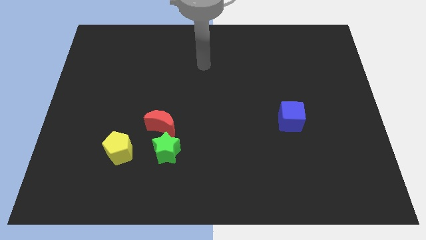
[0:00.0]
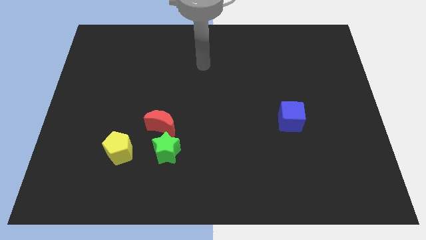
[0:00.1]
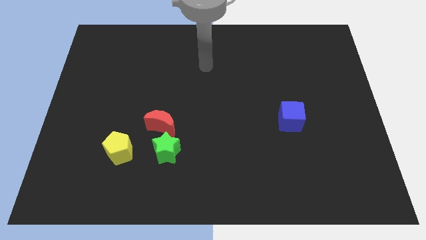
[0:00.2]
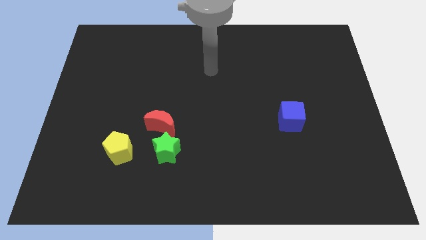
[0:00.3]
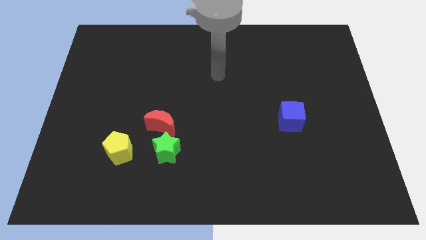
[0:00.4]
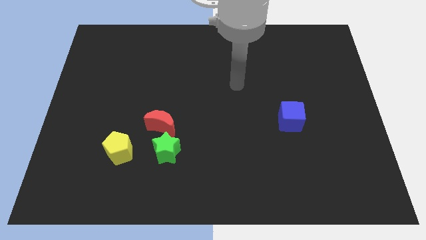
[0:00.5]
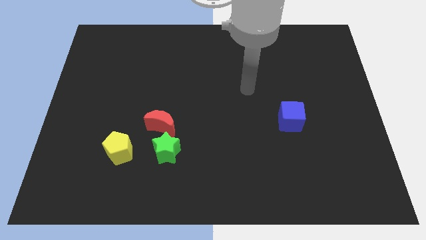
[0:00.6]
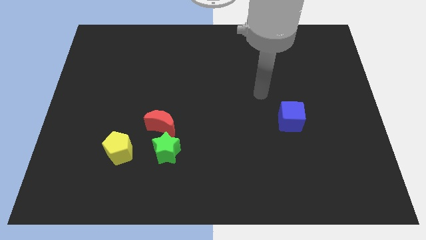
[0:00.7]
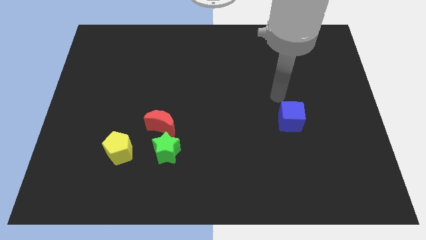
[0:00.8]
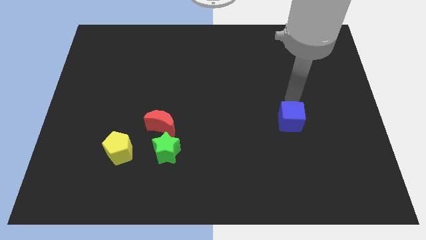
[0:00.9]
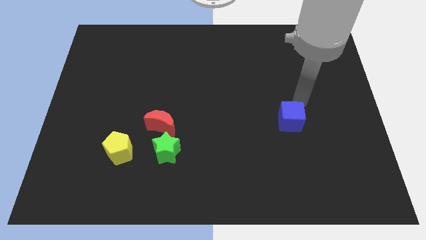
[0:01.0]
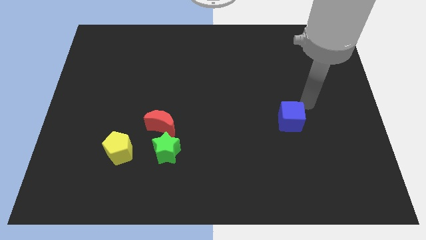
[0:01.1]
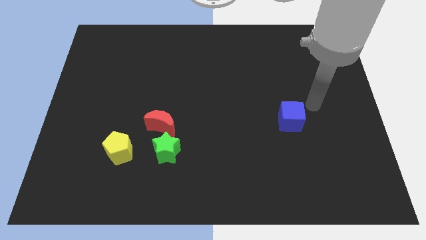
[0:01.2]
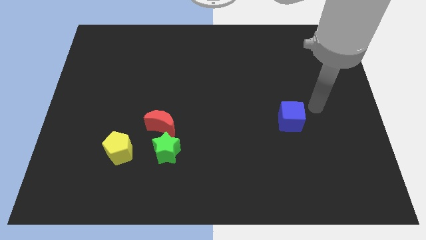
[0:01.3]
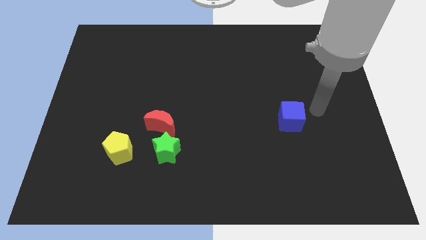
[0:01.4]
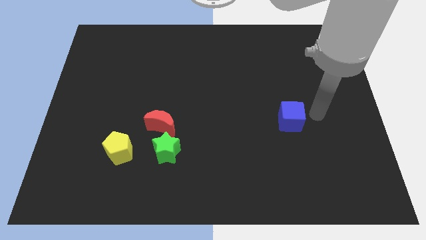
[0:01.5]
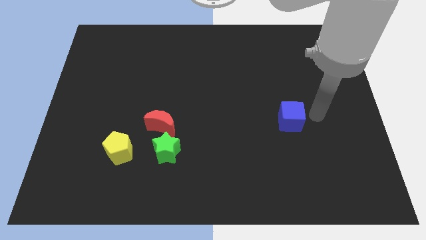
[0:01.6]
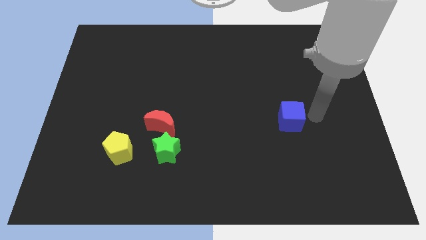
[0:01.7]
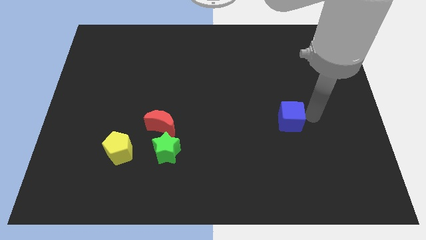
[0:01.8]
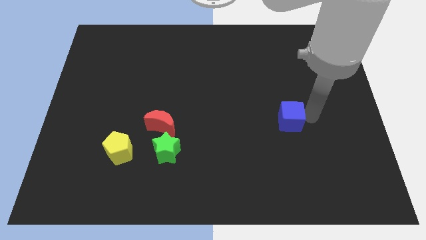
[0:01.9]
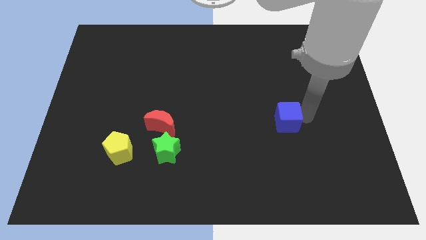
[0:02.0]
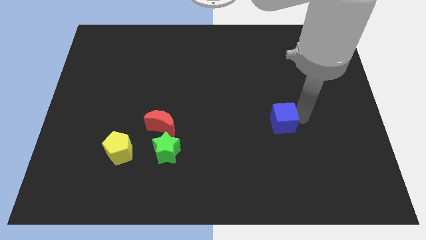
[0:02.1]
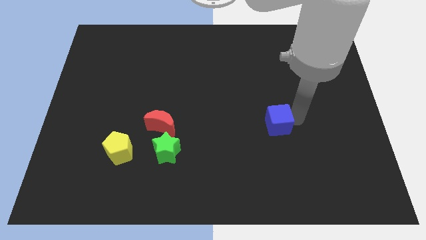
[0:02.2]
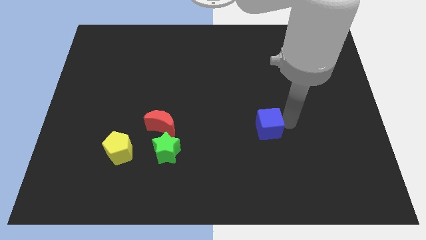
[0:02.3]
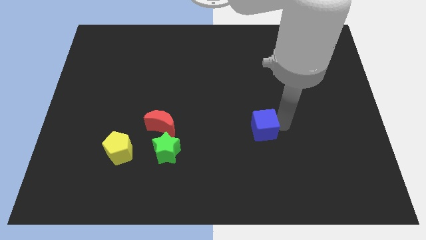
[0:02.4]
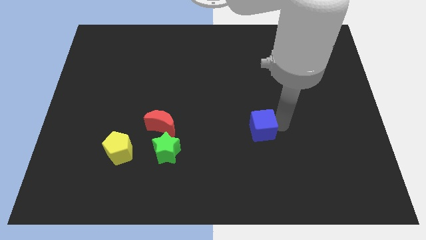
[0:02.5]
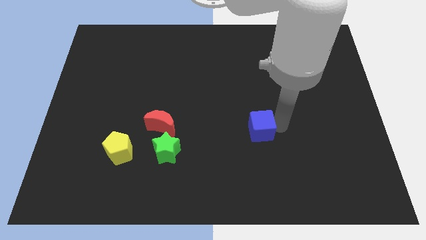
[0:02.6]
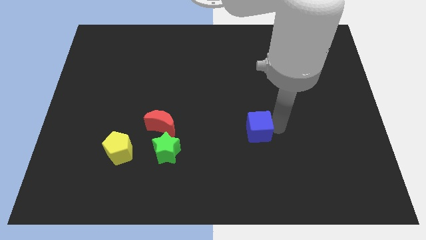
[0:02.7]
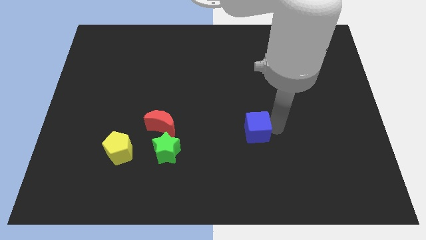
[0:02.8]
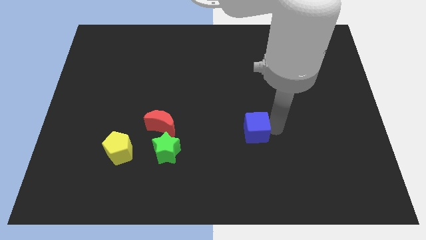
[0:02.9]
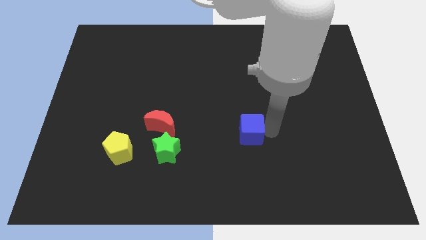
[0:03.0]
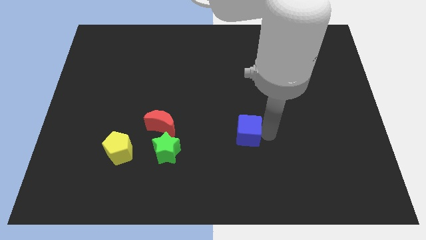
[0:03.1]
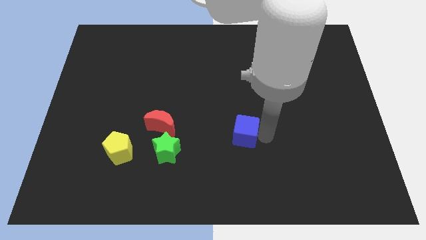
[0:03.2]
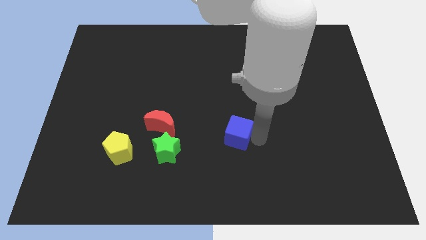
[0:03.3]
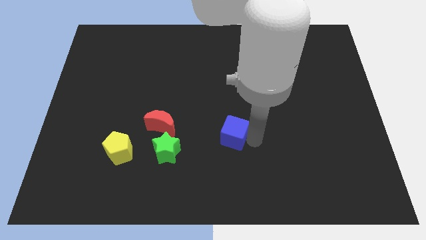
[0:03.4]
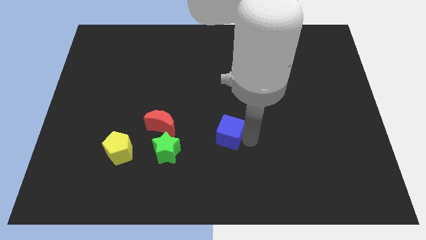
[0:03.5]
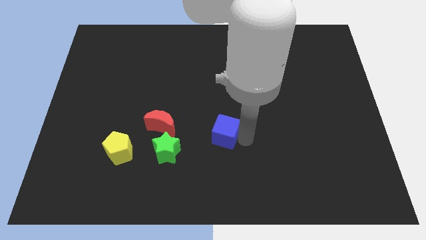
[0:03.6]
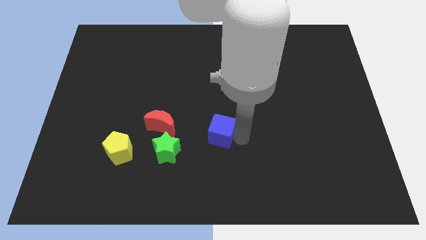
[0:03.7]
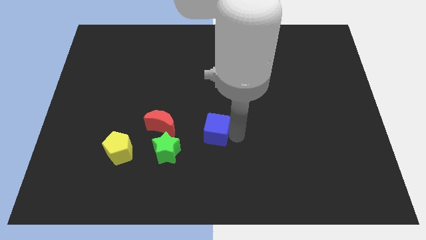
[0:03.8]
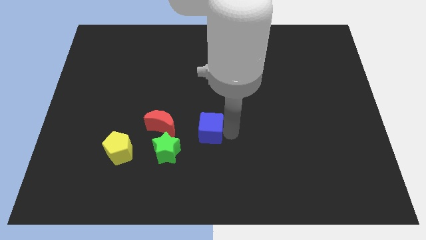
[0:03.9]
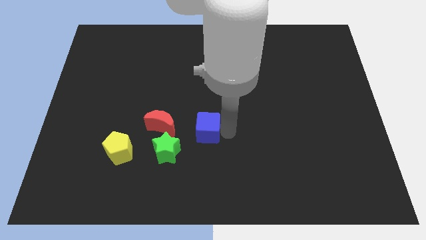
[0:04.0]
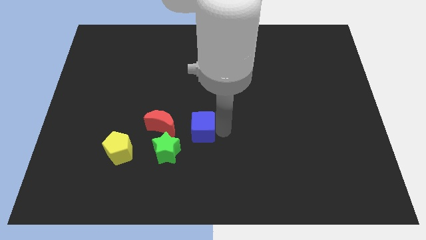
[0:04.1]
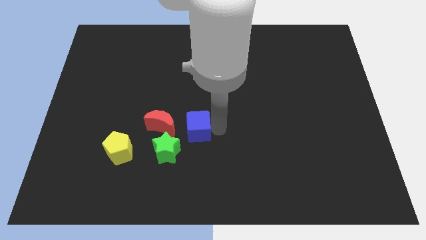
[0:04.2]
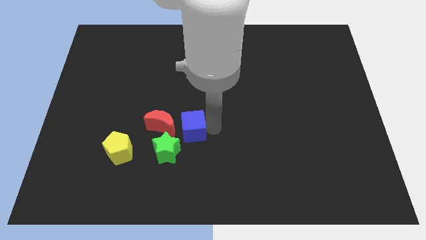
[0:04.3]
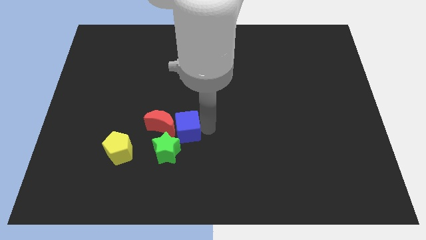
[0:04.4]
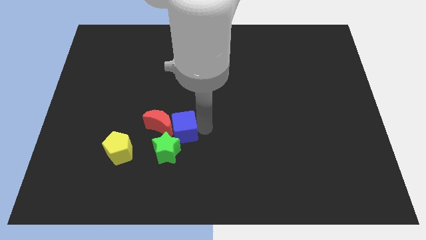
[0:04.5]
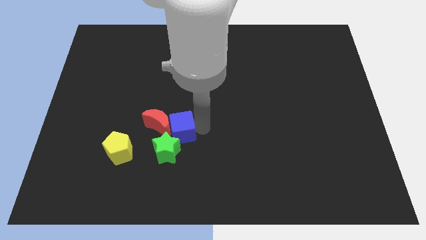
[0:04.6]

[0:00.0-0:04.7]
slide the blue block next to the moon

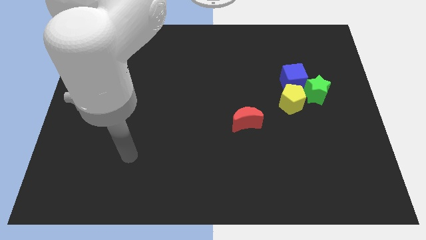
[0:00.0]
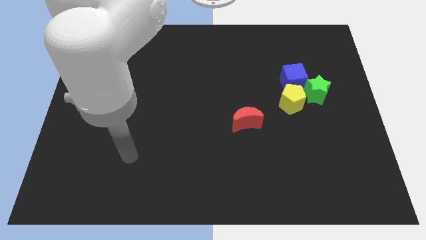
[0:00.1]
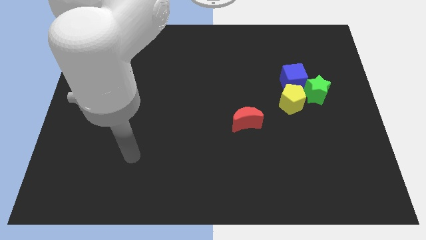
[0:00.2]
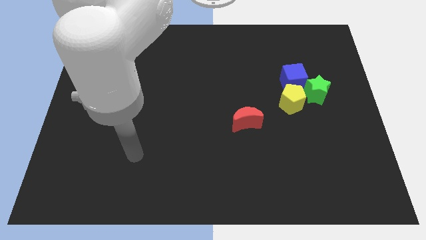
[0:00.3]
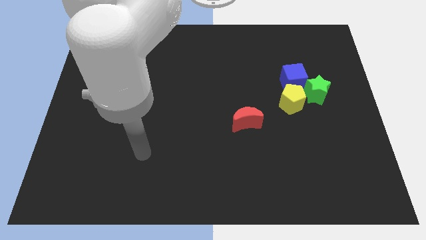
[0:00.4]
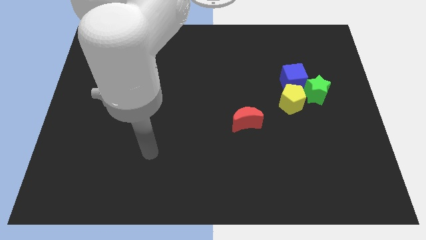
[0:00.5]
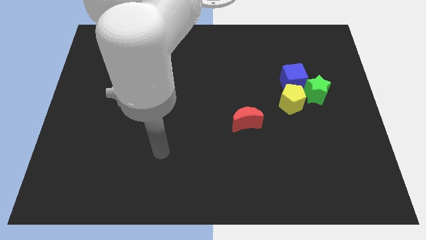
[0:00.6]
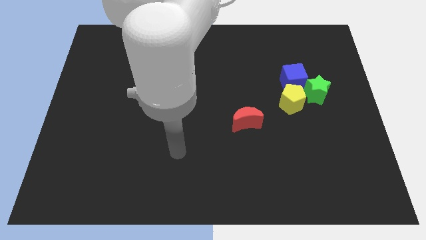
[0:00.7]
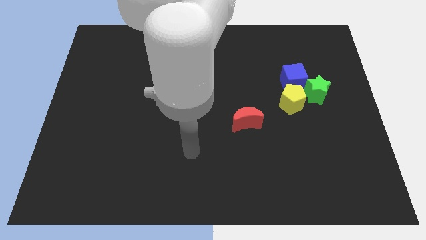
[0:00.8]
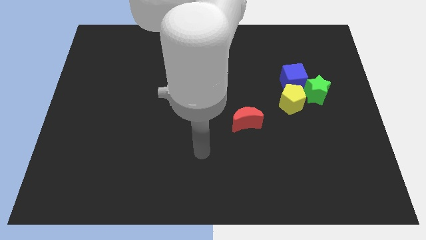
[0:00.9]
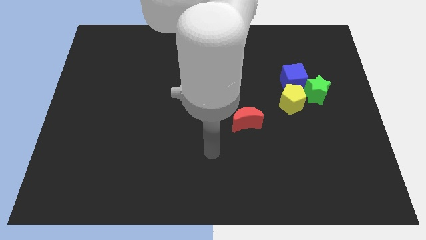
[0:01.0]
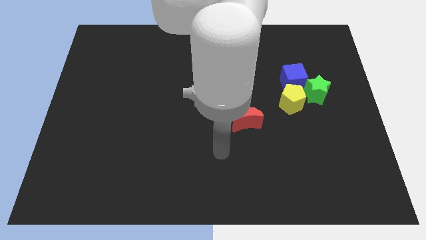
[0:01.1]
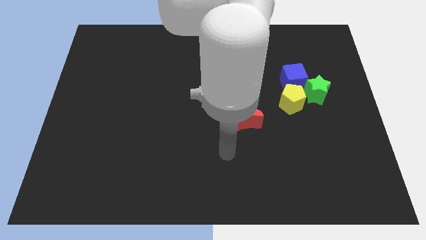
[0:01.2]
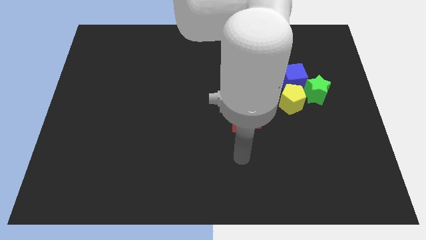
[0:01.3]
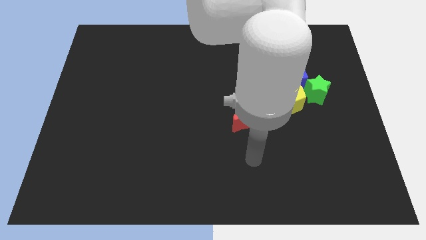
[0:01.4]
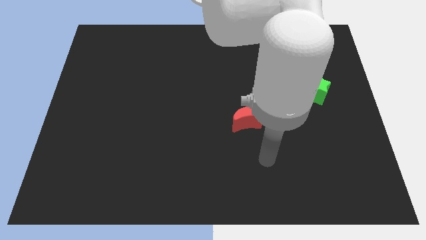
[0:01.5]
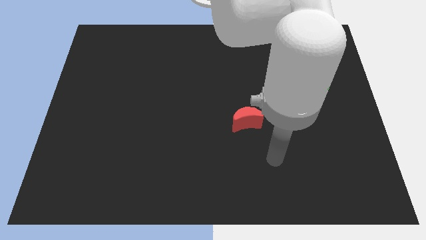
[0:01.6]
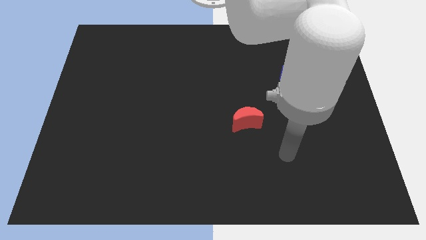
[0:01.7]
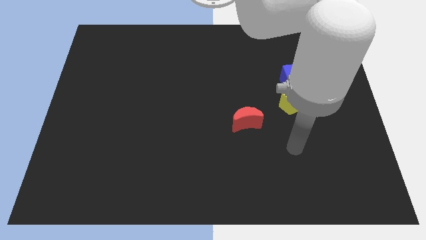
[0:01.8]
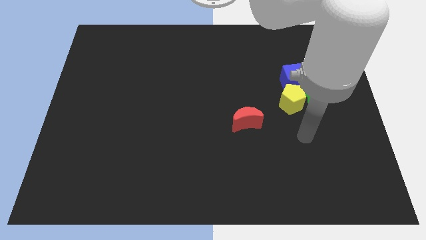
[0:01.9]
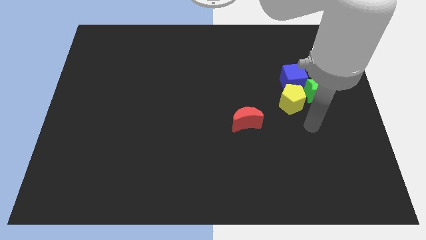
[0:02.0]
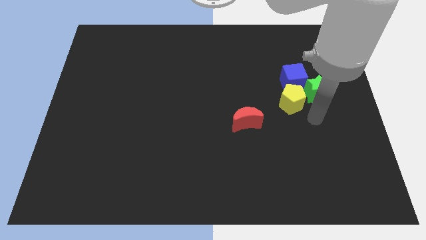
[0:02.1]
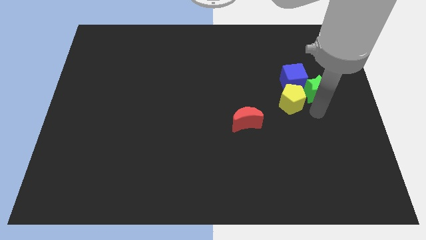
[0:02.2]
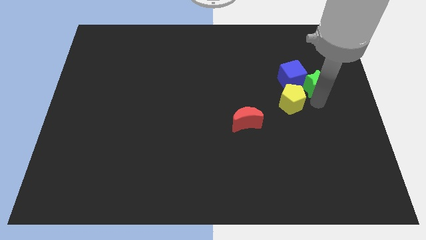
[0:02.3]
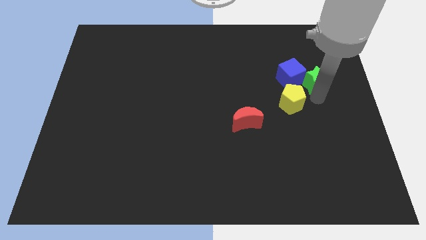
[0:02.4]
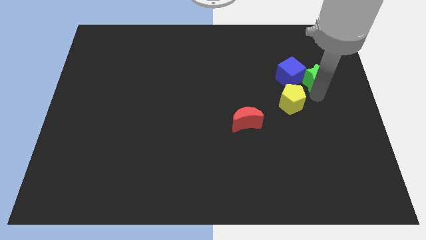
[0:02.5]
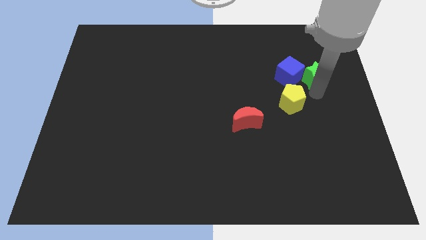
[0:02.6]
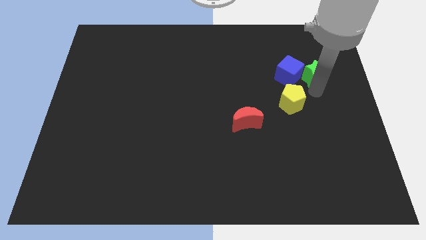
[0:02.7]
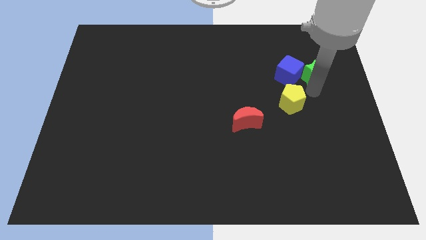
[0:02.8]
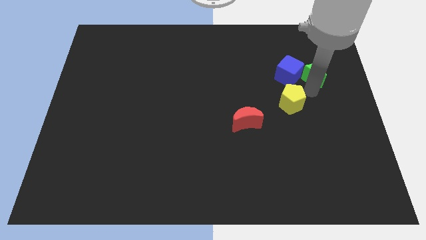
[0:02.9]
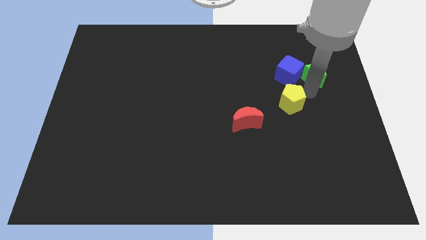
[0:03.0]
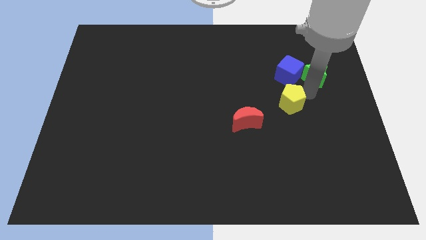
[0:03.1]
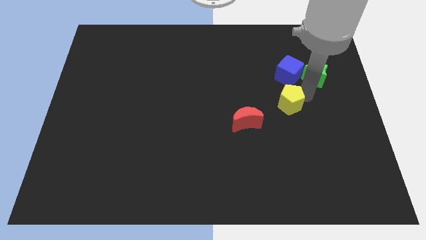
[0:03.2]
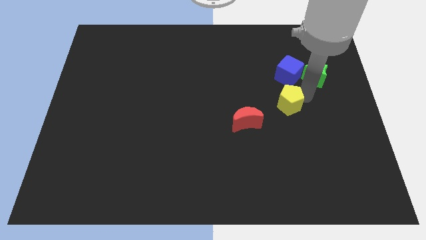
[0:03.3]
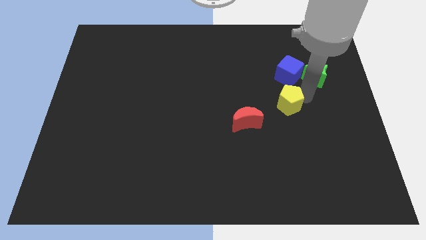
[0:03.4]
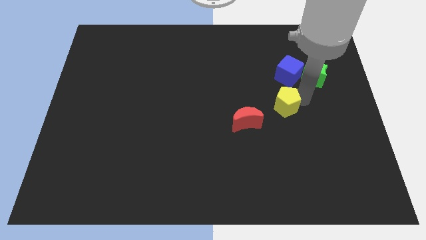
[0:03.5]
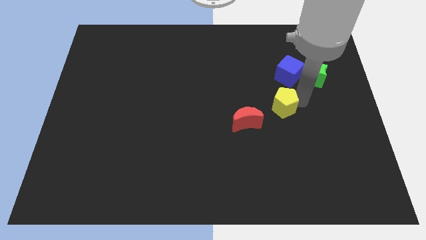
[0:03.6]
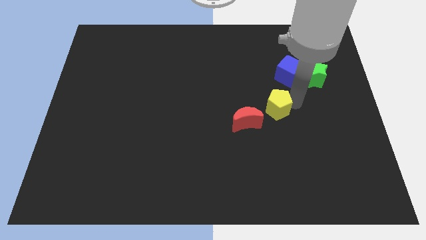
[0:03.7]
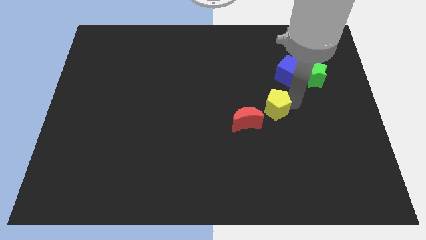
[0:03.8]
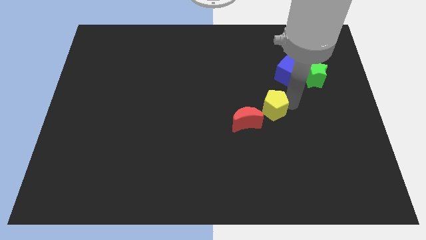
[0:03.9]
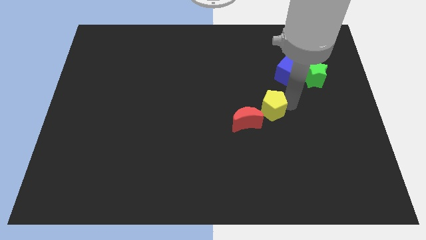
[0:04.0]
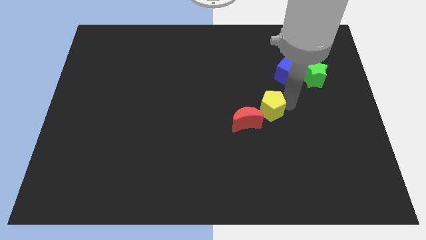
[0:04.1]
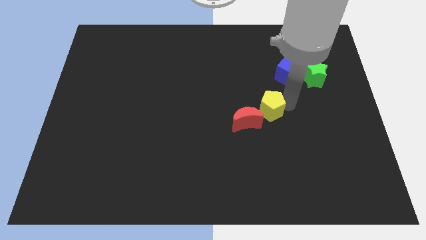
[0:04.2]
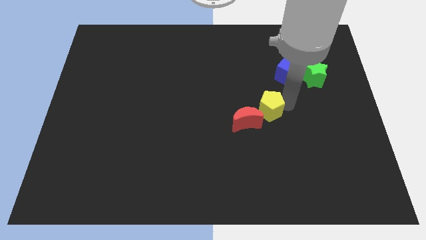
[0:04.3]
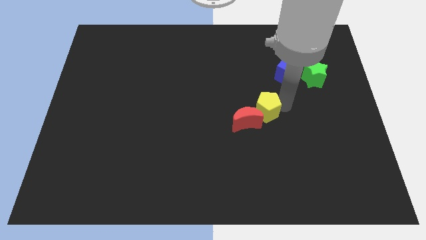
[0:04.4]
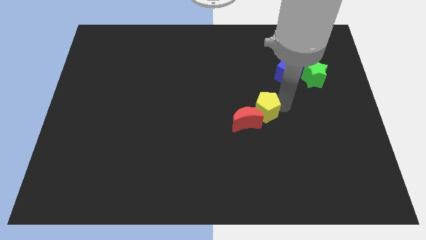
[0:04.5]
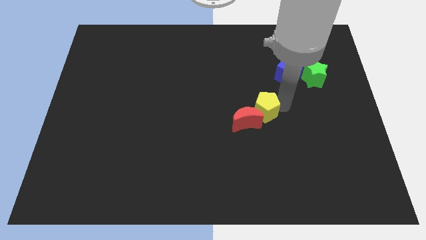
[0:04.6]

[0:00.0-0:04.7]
move the yellow pentagon close to the red moon
